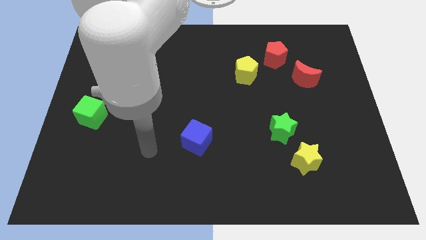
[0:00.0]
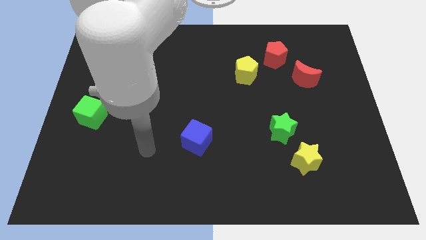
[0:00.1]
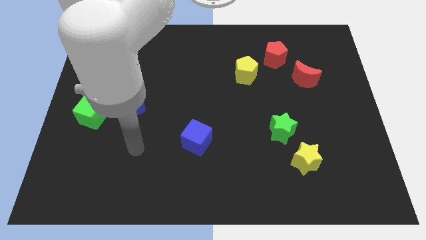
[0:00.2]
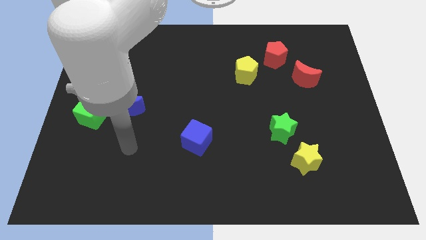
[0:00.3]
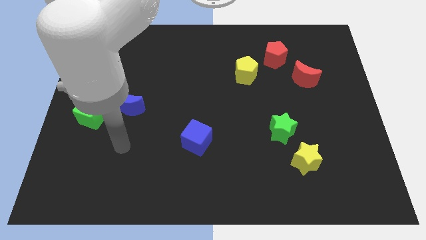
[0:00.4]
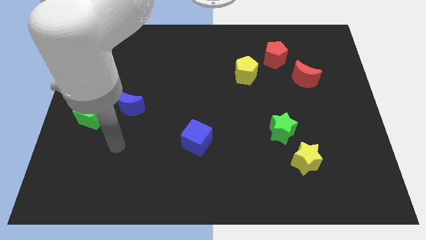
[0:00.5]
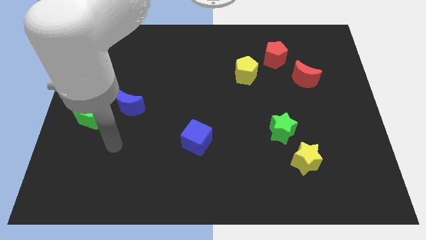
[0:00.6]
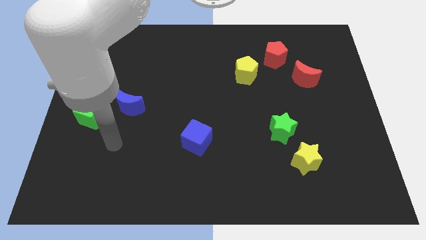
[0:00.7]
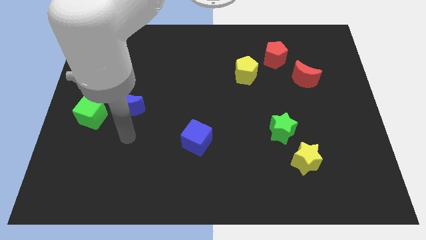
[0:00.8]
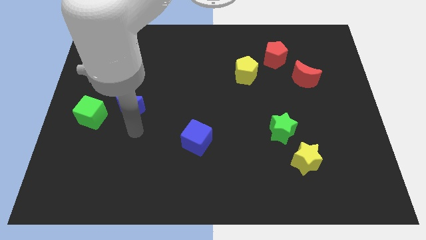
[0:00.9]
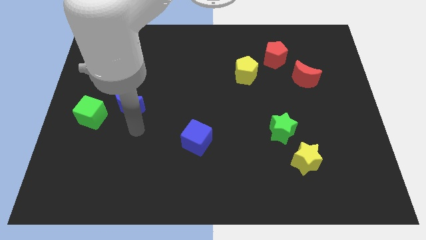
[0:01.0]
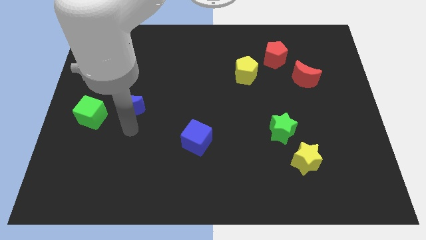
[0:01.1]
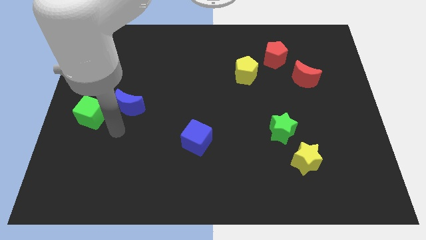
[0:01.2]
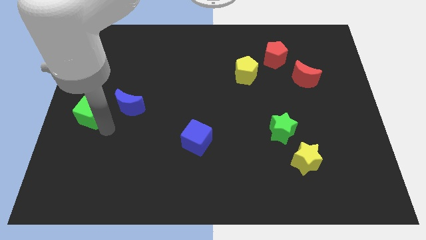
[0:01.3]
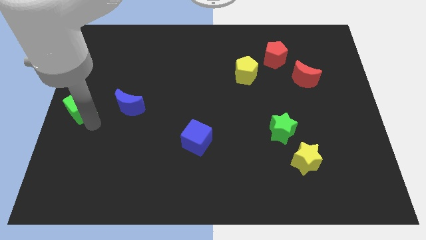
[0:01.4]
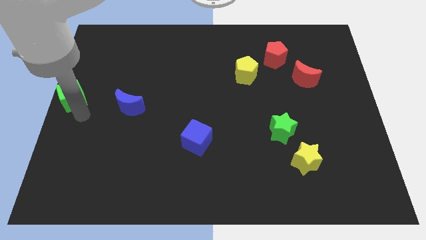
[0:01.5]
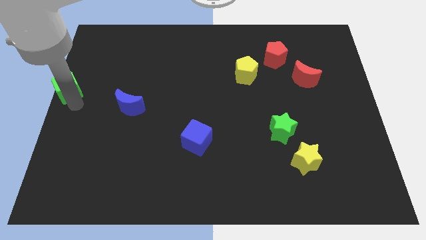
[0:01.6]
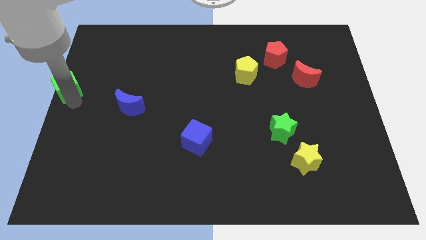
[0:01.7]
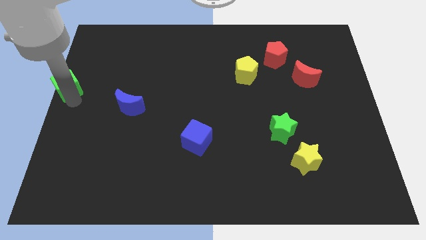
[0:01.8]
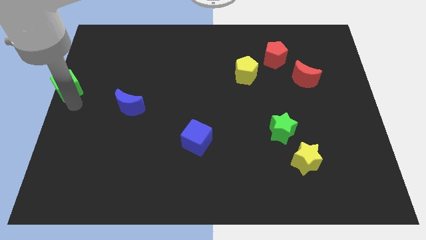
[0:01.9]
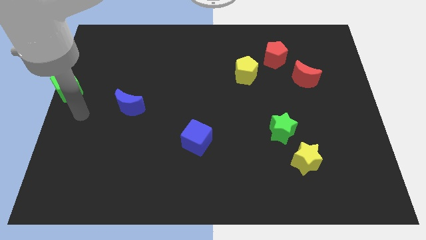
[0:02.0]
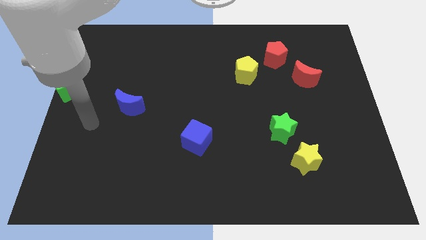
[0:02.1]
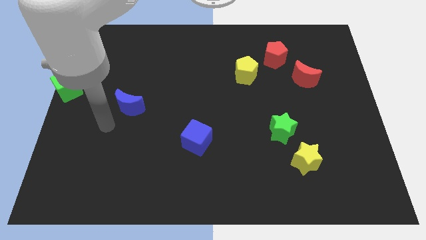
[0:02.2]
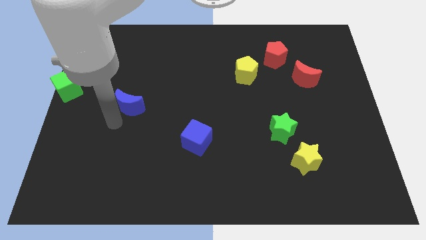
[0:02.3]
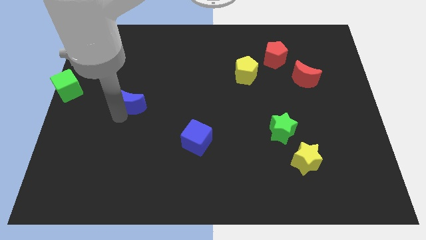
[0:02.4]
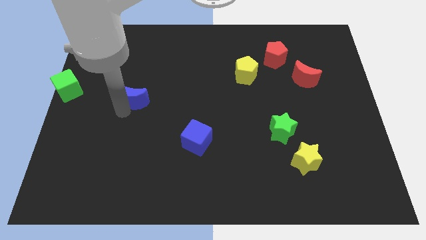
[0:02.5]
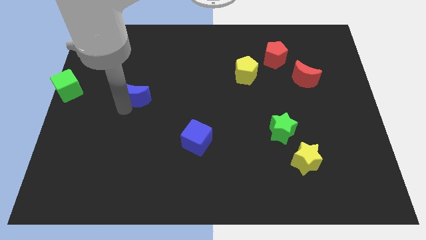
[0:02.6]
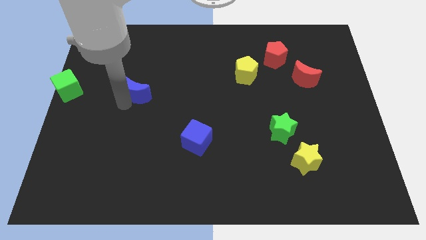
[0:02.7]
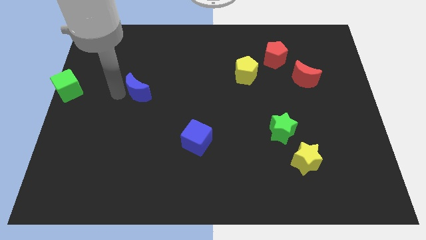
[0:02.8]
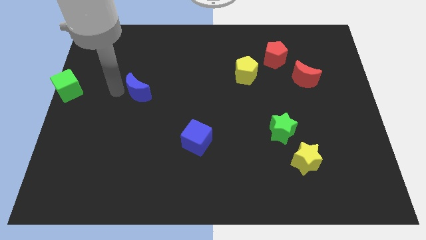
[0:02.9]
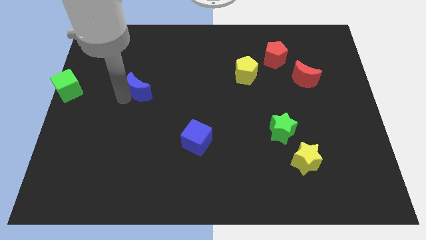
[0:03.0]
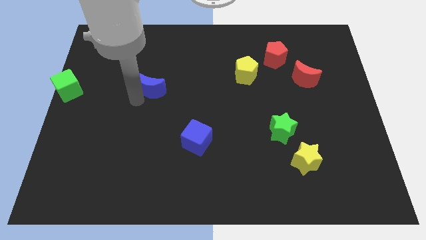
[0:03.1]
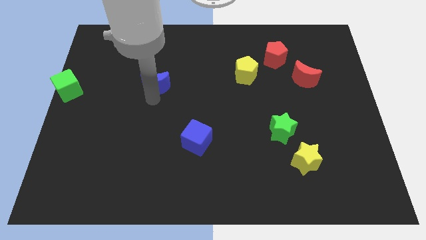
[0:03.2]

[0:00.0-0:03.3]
place the green cube in the middle left

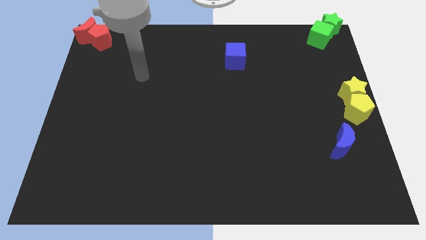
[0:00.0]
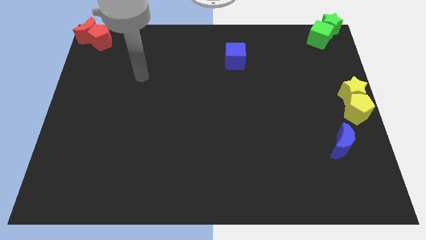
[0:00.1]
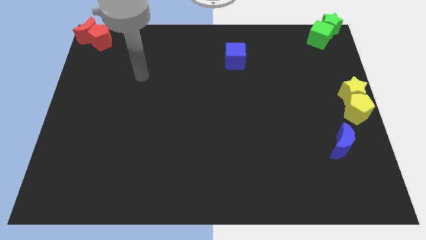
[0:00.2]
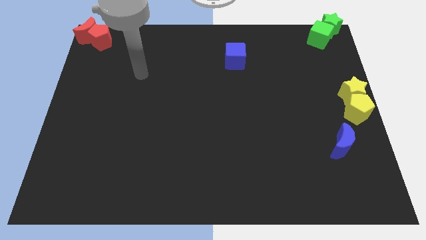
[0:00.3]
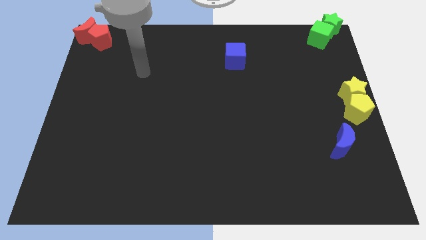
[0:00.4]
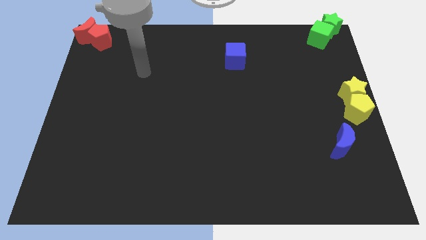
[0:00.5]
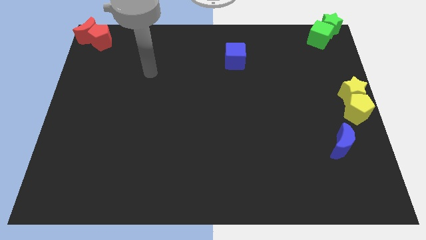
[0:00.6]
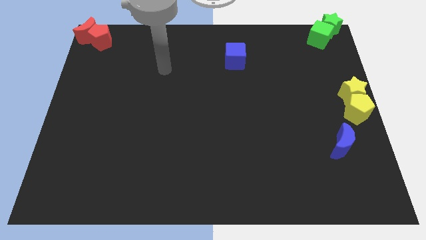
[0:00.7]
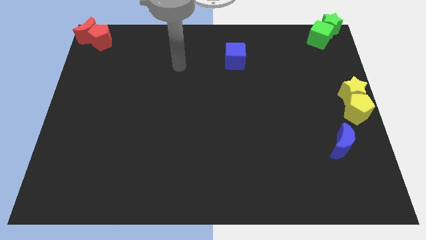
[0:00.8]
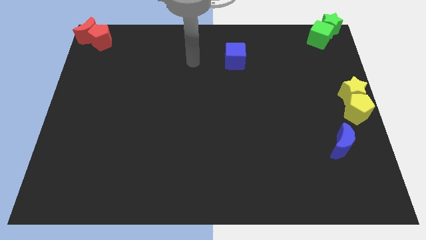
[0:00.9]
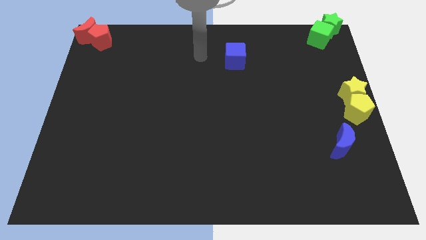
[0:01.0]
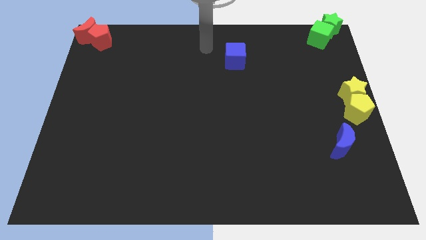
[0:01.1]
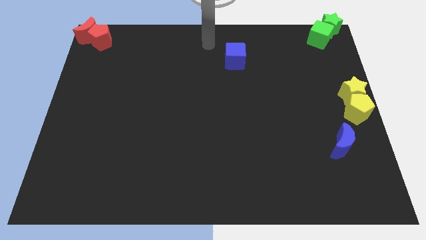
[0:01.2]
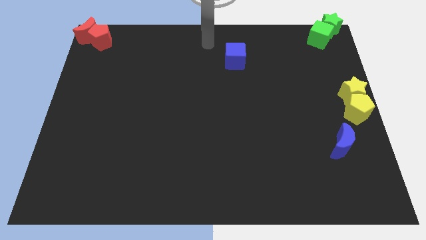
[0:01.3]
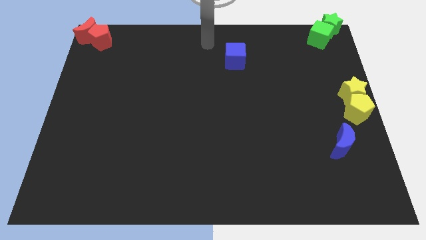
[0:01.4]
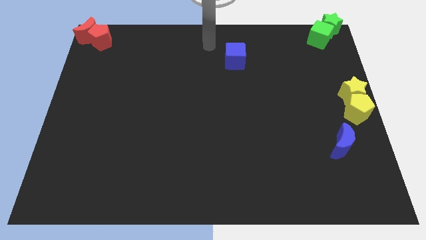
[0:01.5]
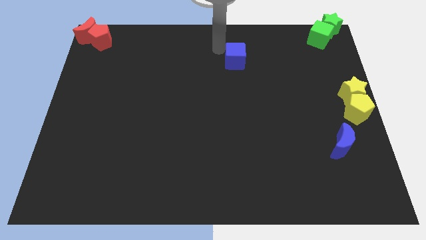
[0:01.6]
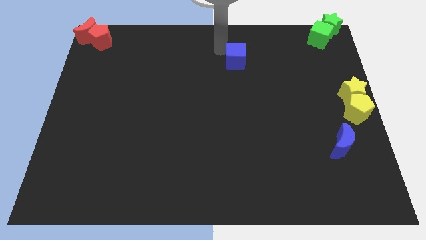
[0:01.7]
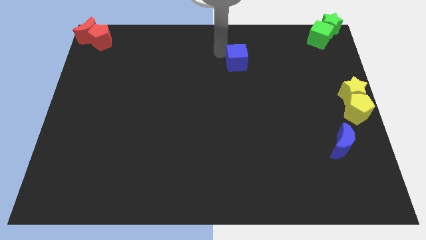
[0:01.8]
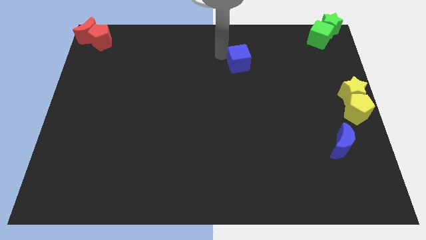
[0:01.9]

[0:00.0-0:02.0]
move your arm towards the blue cube

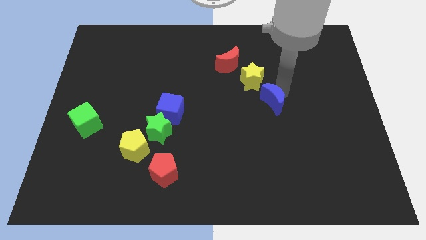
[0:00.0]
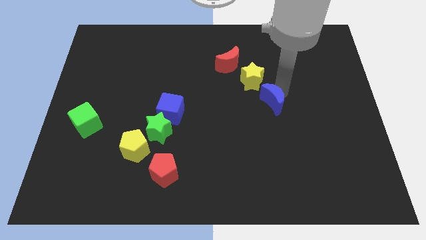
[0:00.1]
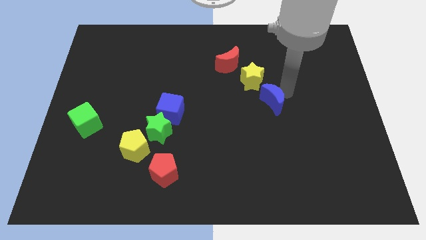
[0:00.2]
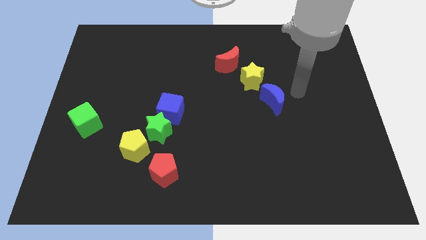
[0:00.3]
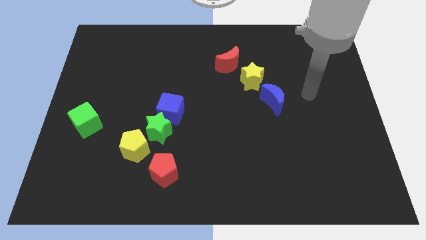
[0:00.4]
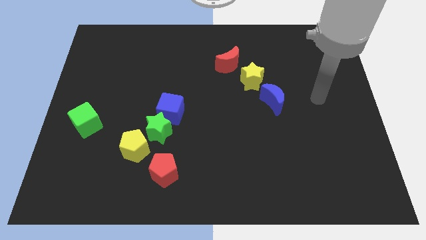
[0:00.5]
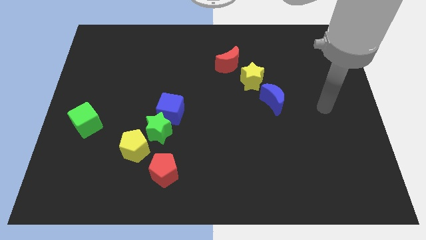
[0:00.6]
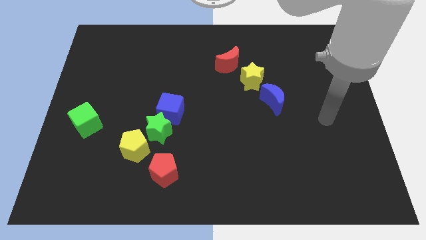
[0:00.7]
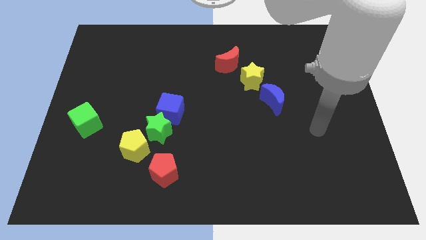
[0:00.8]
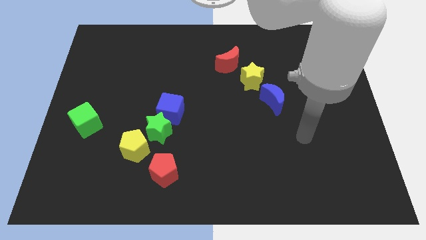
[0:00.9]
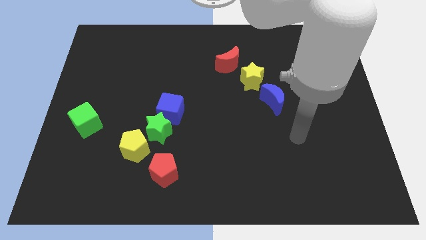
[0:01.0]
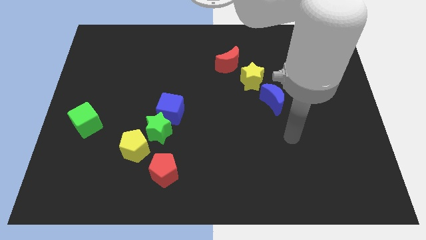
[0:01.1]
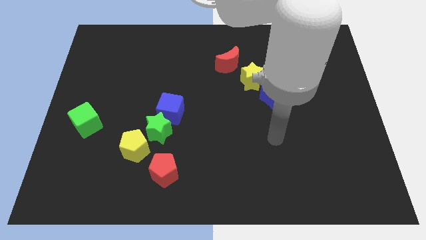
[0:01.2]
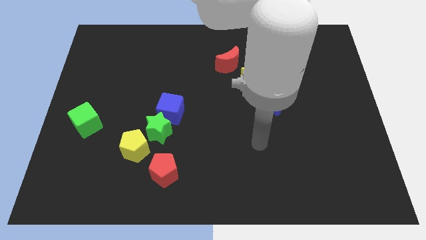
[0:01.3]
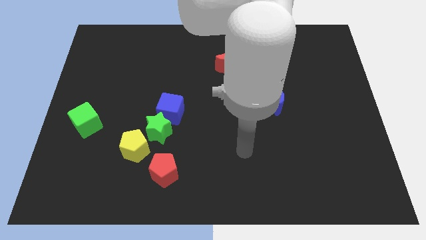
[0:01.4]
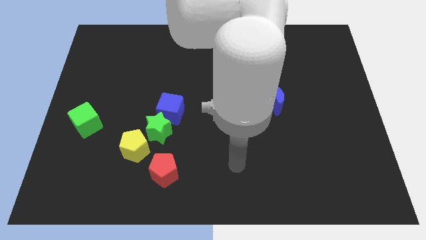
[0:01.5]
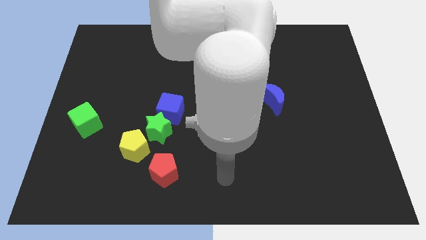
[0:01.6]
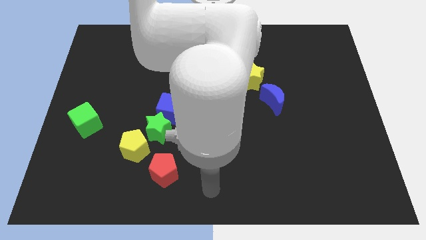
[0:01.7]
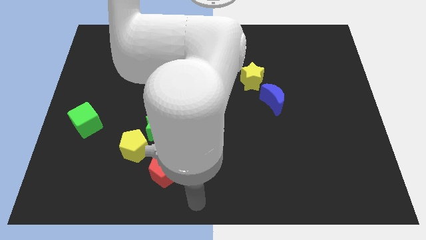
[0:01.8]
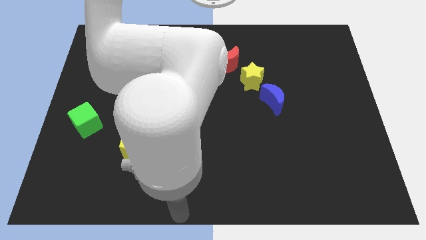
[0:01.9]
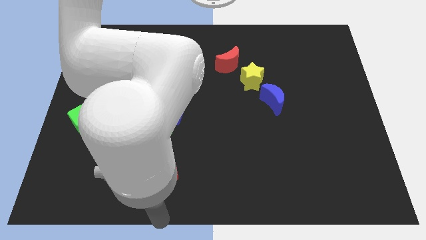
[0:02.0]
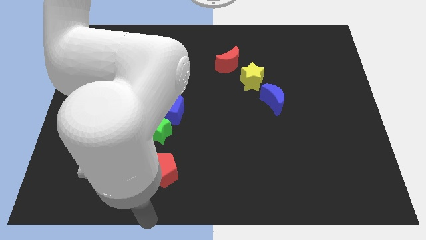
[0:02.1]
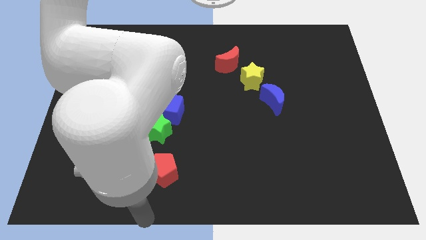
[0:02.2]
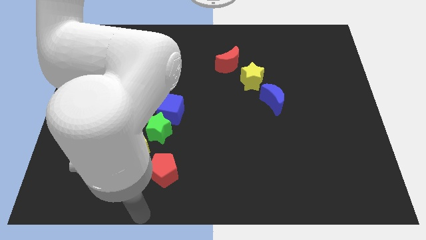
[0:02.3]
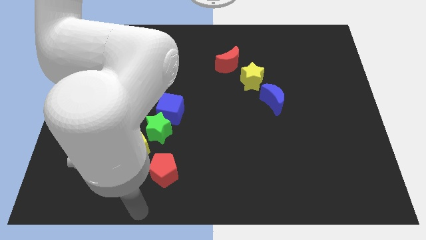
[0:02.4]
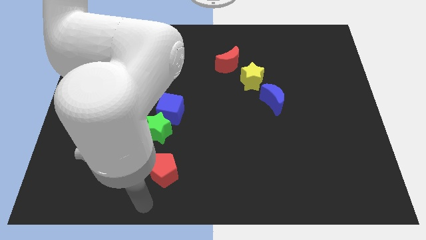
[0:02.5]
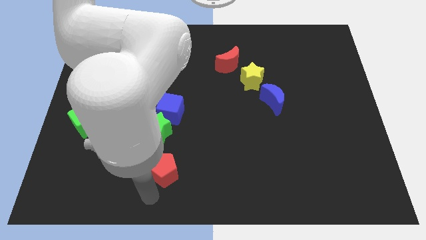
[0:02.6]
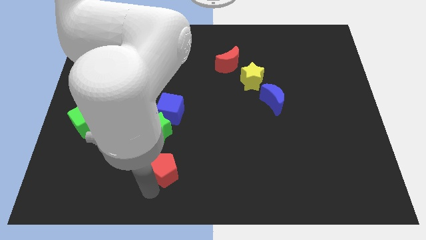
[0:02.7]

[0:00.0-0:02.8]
move arm near red pentagon

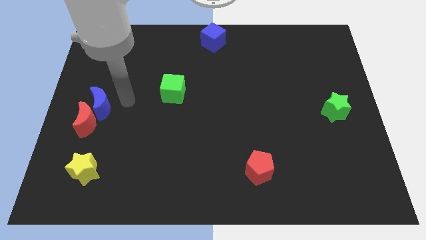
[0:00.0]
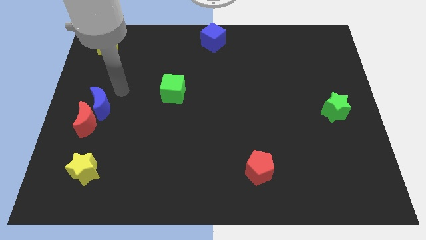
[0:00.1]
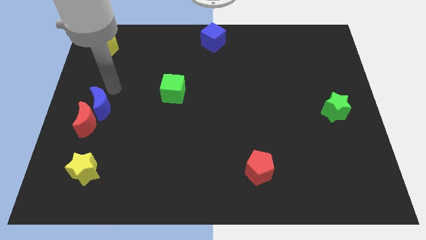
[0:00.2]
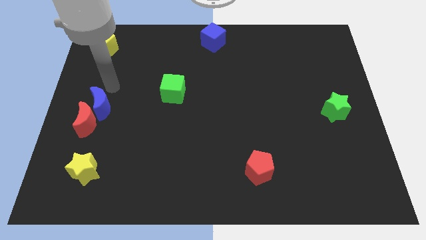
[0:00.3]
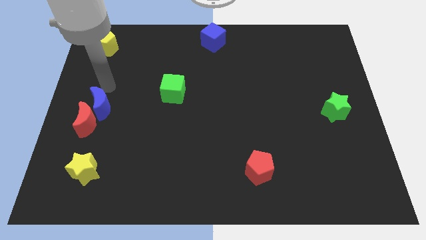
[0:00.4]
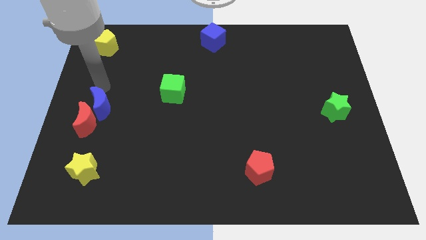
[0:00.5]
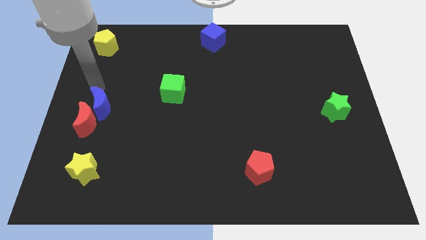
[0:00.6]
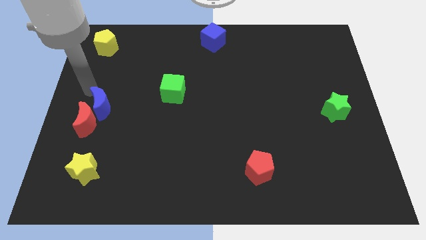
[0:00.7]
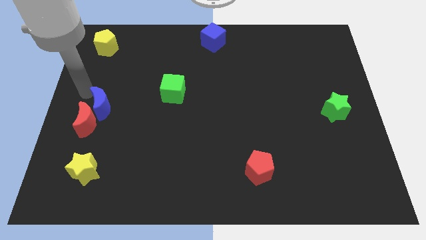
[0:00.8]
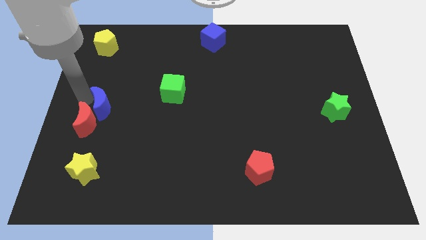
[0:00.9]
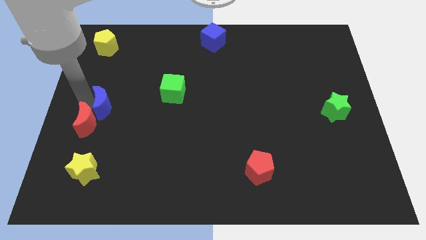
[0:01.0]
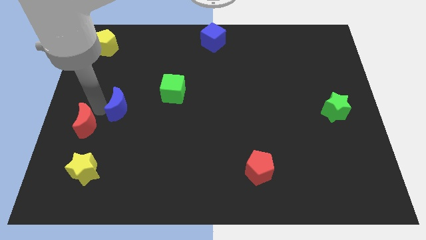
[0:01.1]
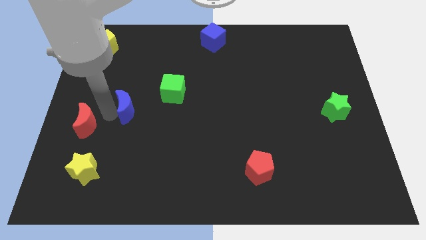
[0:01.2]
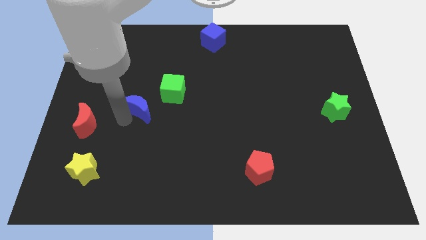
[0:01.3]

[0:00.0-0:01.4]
slide the blue crescent away from the red moon
